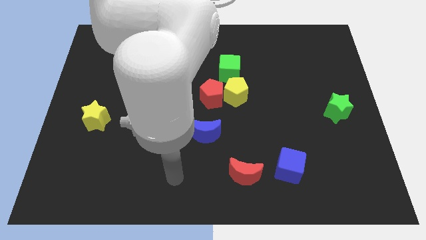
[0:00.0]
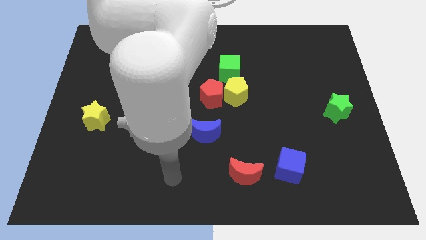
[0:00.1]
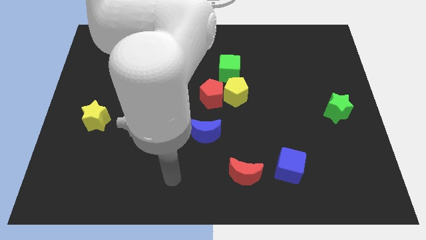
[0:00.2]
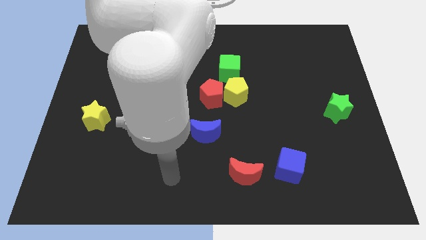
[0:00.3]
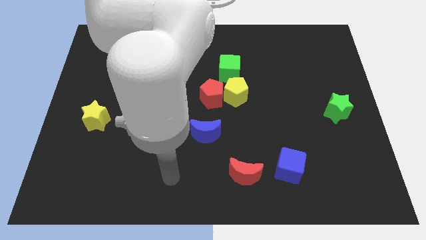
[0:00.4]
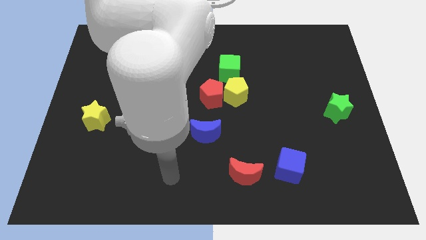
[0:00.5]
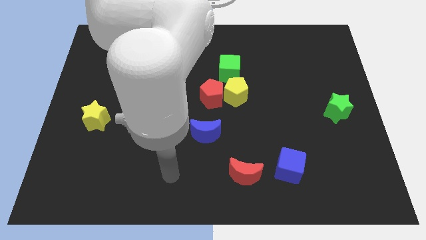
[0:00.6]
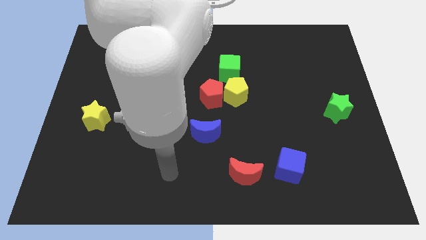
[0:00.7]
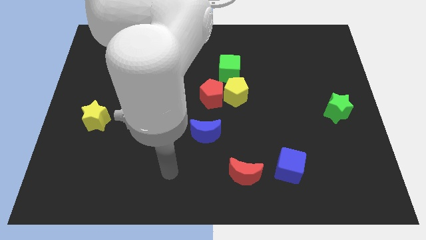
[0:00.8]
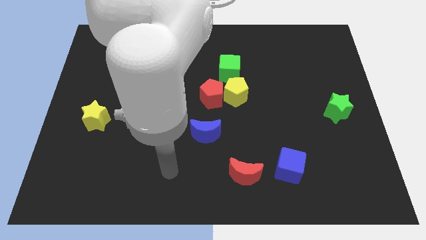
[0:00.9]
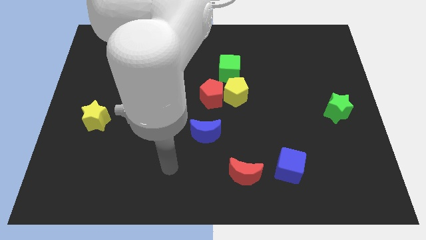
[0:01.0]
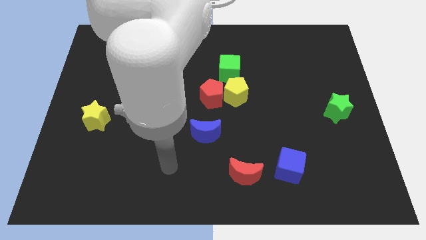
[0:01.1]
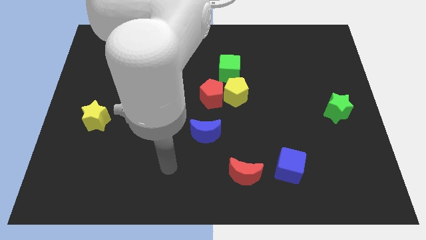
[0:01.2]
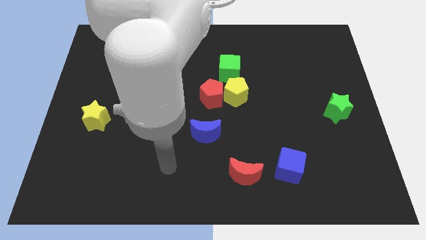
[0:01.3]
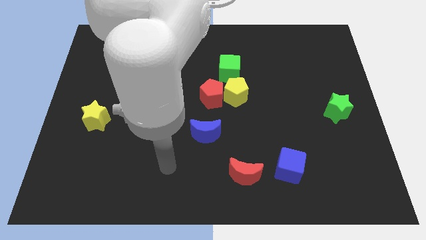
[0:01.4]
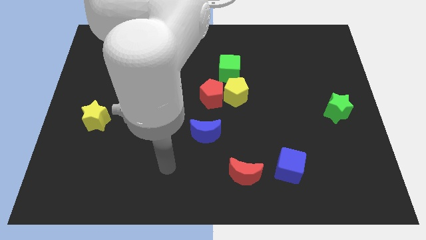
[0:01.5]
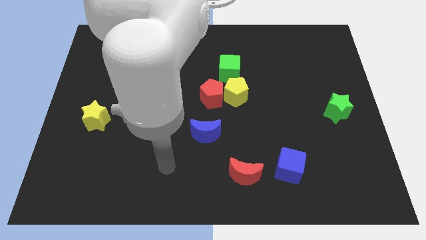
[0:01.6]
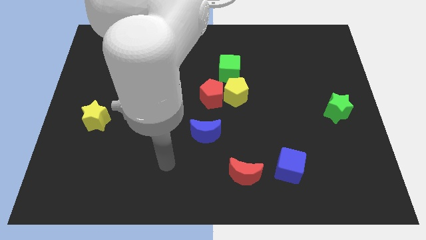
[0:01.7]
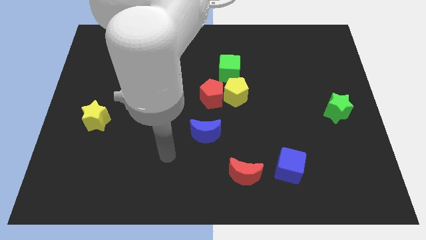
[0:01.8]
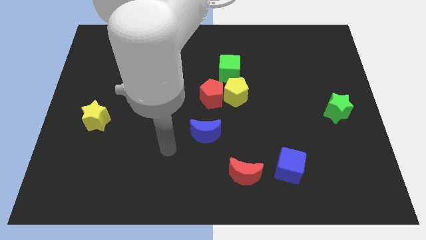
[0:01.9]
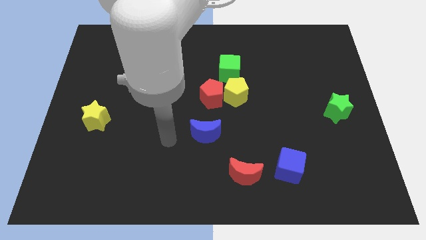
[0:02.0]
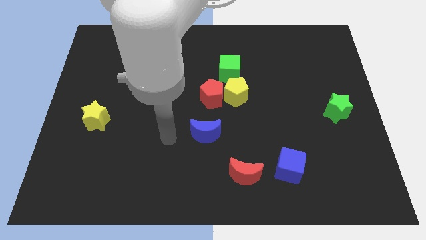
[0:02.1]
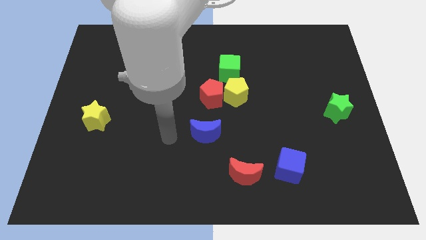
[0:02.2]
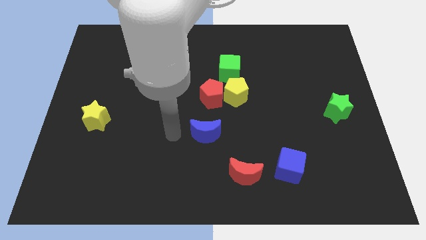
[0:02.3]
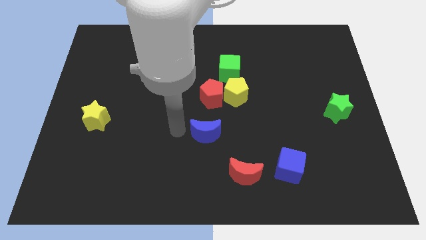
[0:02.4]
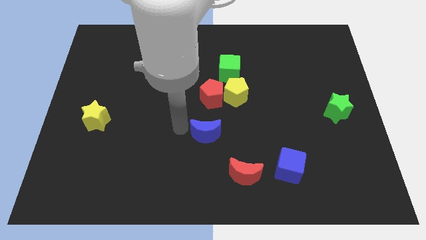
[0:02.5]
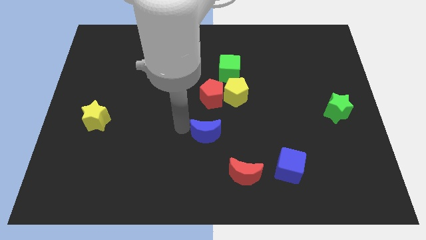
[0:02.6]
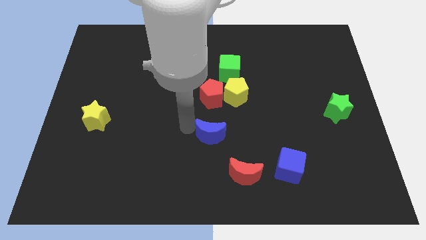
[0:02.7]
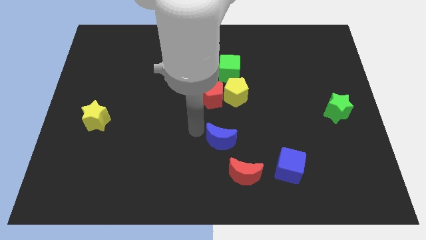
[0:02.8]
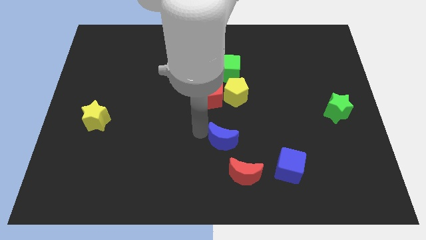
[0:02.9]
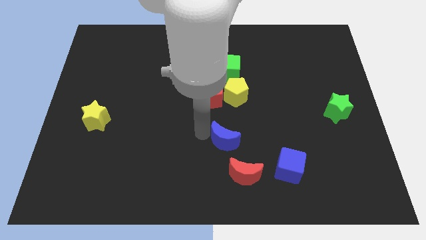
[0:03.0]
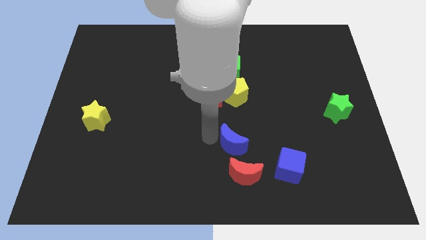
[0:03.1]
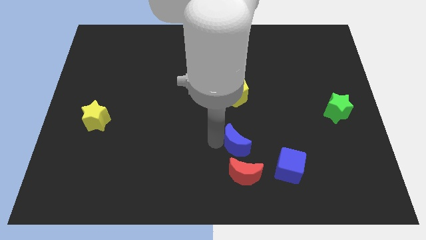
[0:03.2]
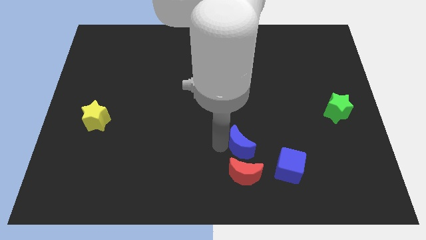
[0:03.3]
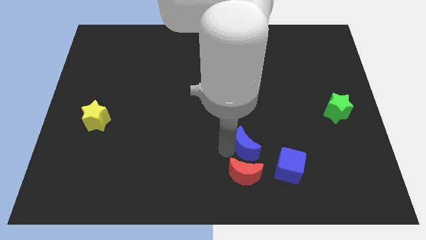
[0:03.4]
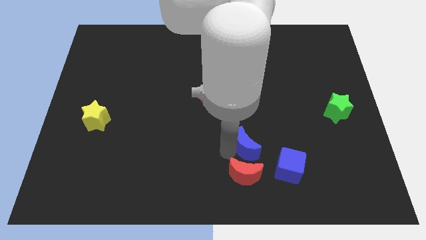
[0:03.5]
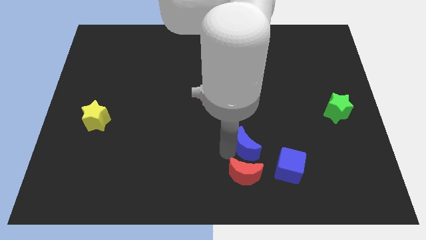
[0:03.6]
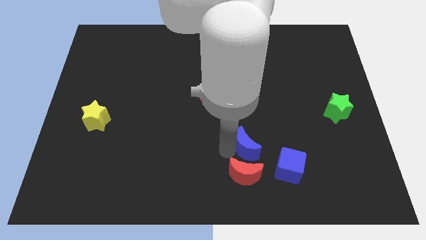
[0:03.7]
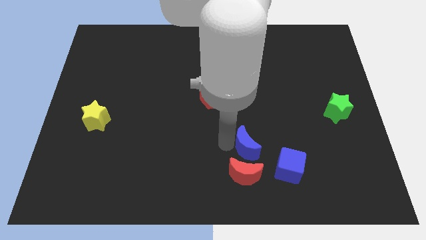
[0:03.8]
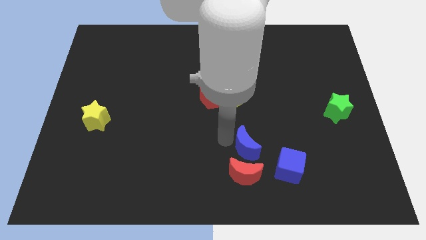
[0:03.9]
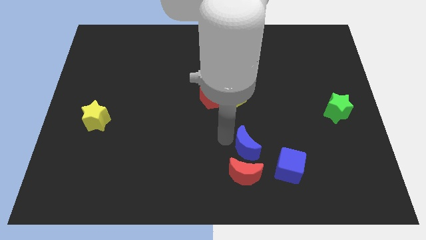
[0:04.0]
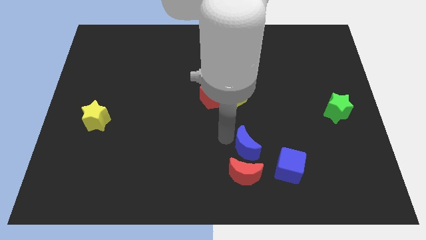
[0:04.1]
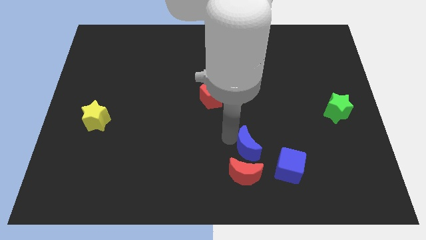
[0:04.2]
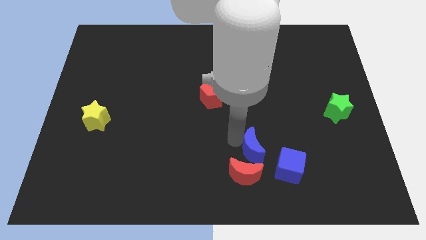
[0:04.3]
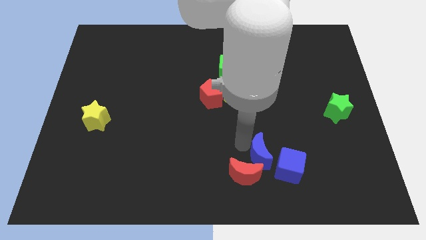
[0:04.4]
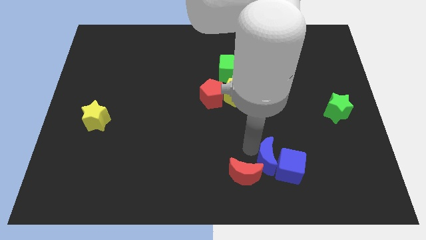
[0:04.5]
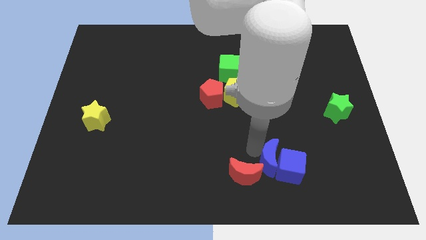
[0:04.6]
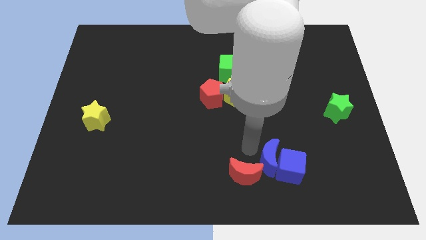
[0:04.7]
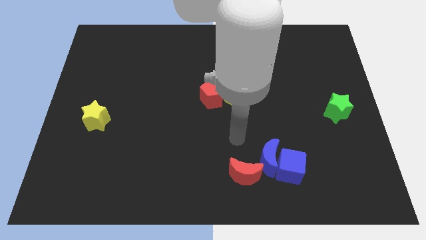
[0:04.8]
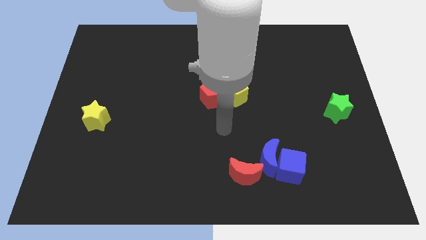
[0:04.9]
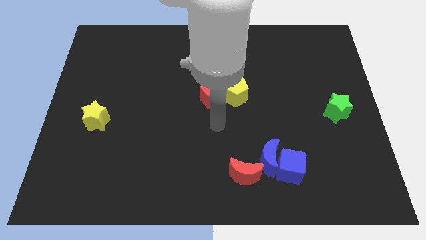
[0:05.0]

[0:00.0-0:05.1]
move the blue crescent into the blue cube

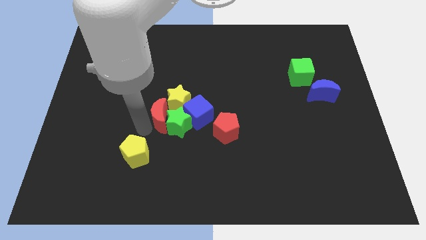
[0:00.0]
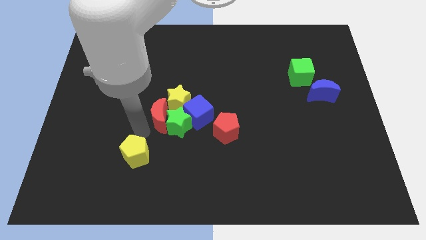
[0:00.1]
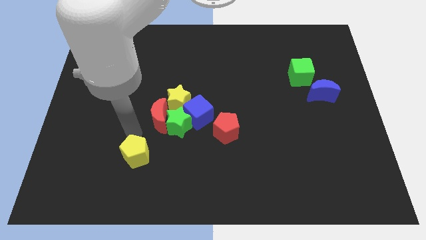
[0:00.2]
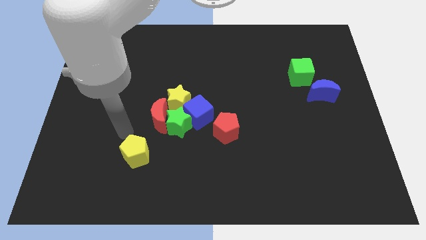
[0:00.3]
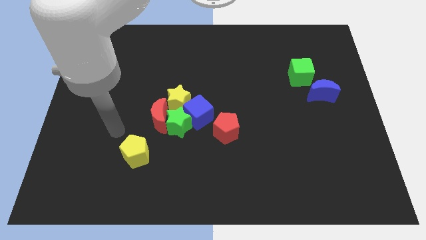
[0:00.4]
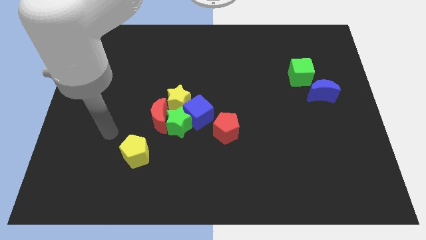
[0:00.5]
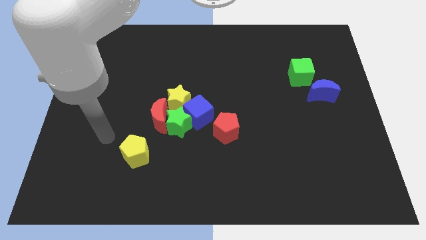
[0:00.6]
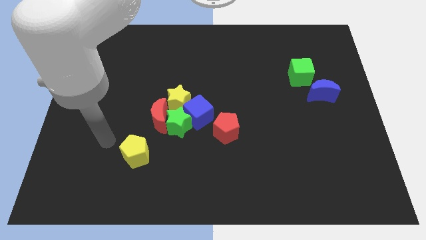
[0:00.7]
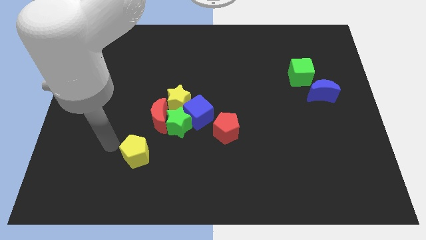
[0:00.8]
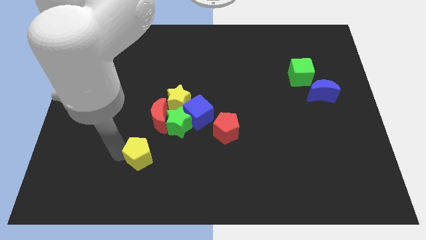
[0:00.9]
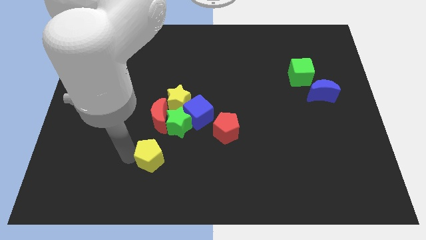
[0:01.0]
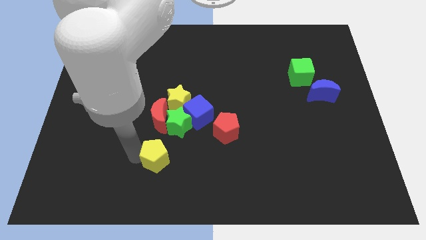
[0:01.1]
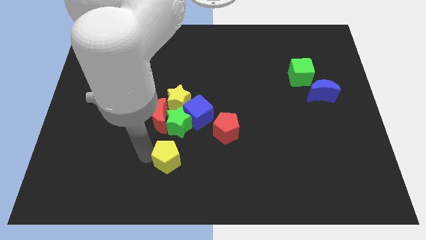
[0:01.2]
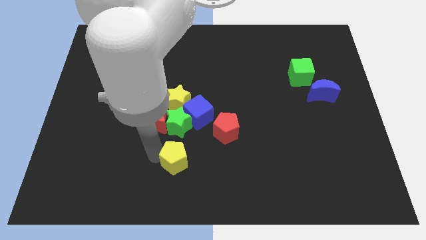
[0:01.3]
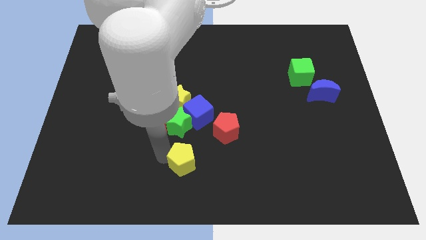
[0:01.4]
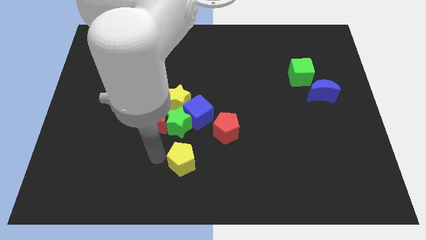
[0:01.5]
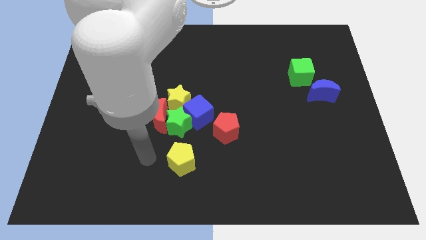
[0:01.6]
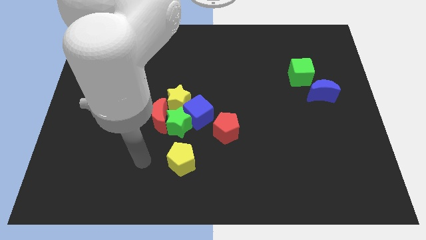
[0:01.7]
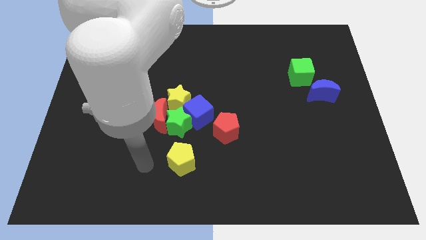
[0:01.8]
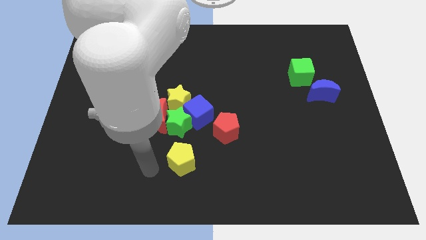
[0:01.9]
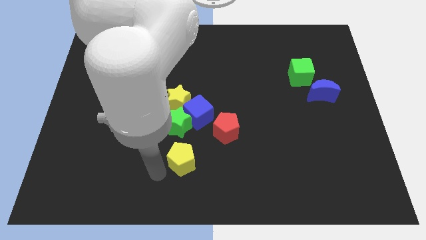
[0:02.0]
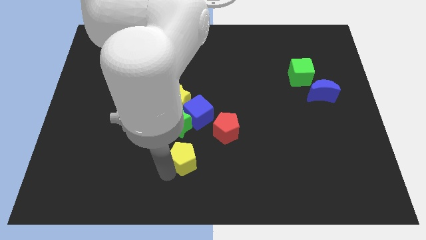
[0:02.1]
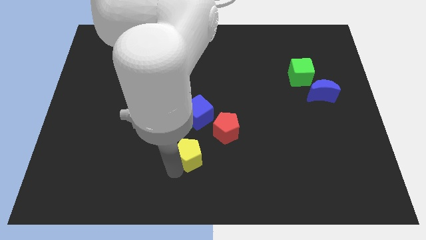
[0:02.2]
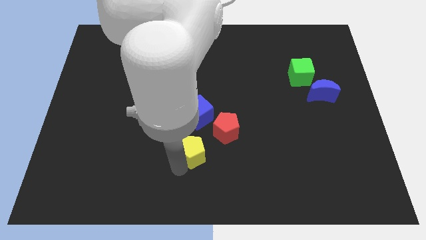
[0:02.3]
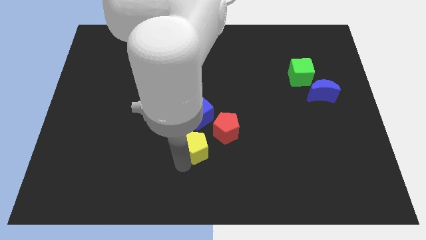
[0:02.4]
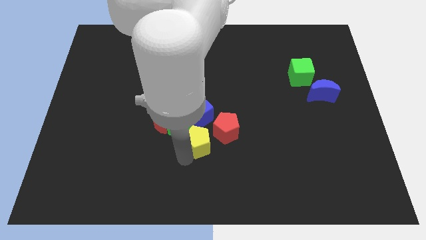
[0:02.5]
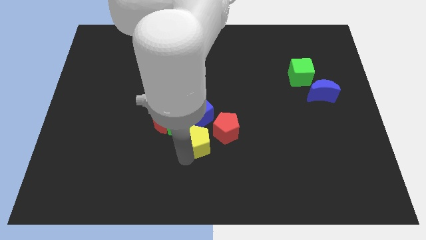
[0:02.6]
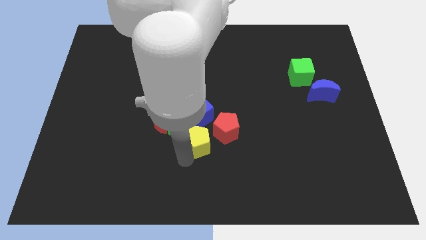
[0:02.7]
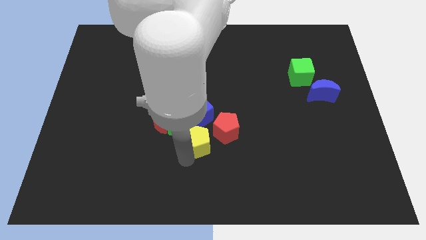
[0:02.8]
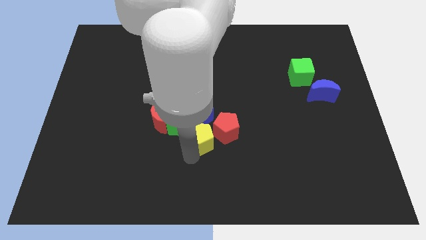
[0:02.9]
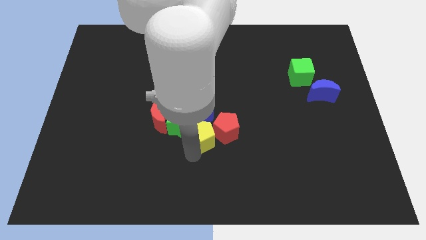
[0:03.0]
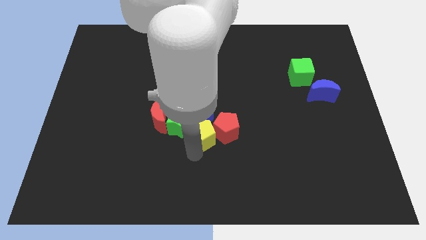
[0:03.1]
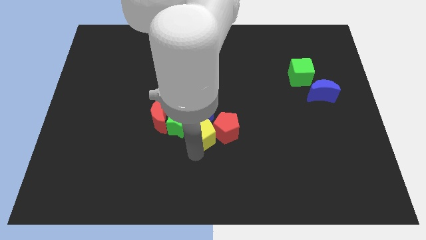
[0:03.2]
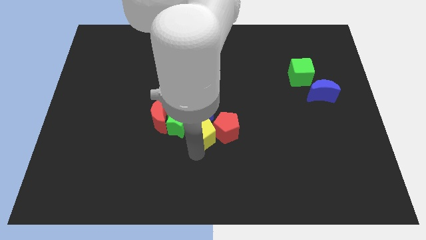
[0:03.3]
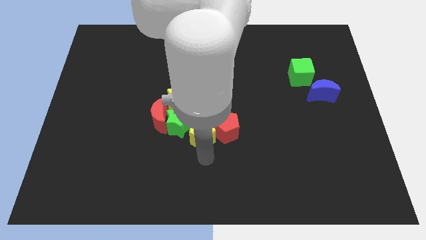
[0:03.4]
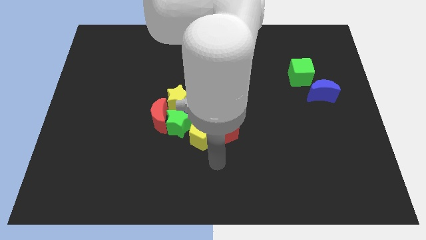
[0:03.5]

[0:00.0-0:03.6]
push the yellow pentagon to the right of the green star

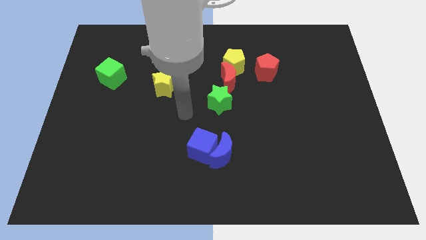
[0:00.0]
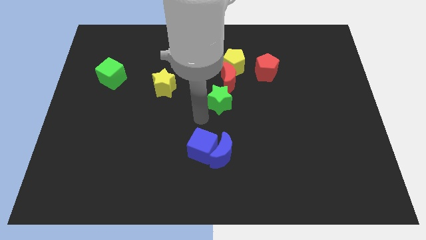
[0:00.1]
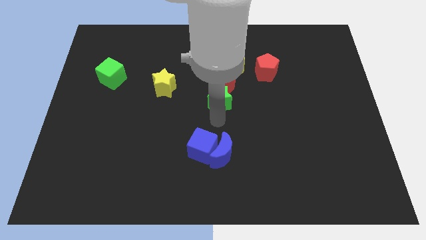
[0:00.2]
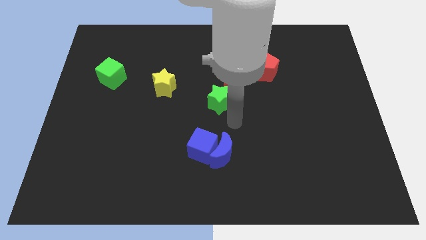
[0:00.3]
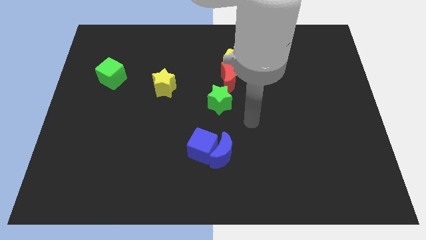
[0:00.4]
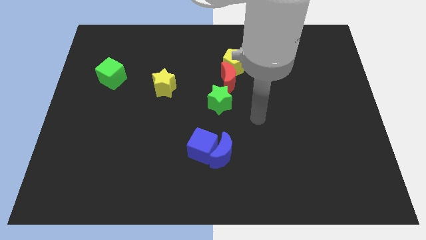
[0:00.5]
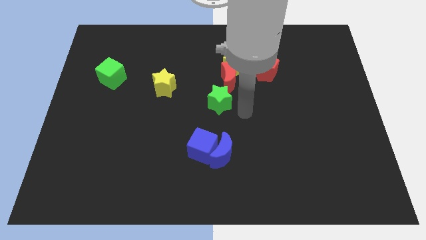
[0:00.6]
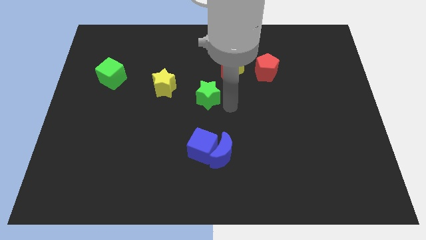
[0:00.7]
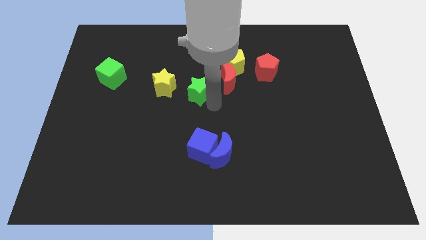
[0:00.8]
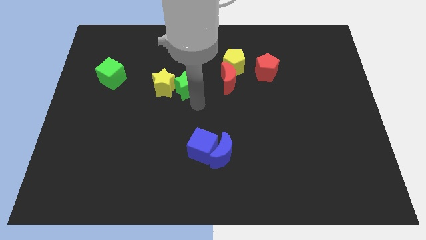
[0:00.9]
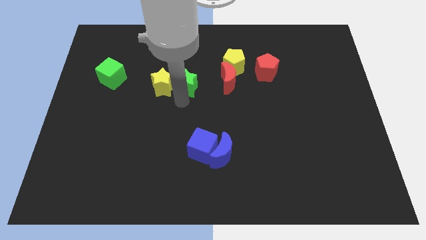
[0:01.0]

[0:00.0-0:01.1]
push the green star into the yellow star
